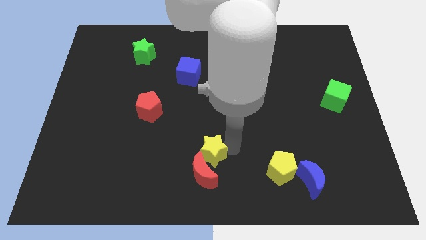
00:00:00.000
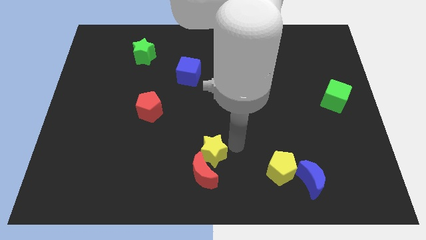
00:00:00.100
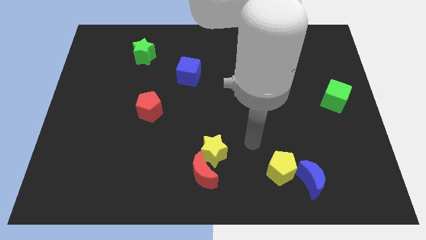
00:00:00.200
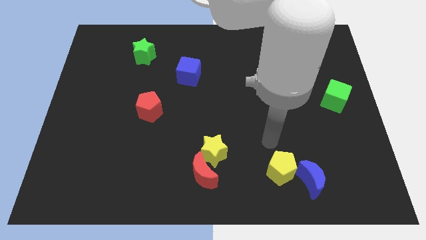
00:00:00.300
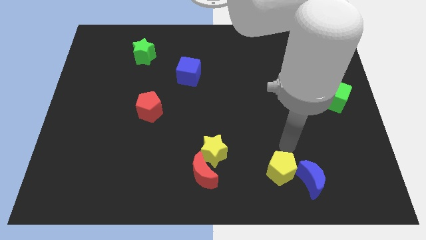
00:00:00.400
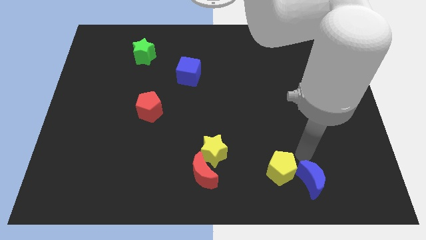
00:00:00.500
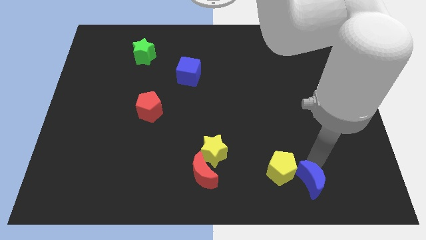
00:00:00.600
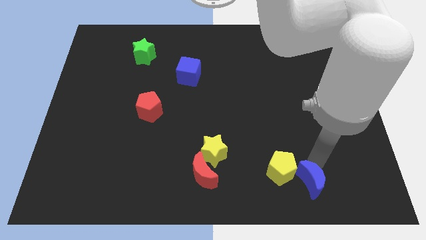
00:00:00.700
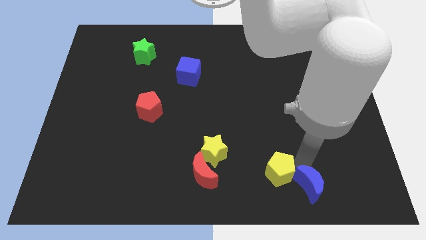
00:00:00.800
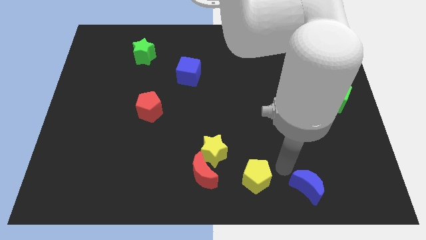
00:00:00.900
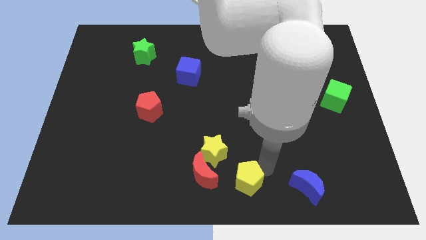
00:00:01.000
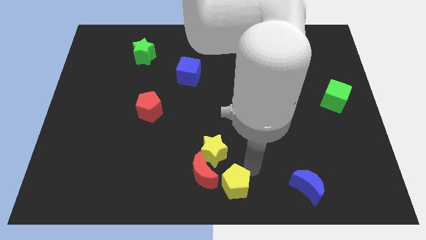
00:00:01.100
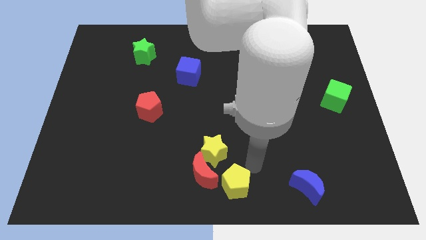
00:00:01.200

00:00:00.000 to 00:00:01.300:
separate the yellow pentagon from blue crescent

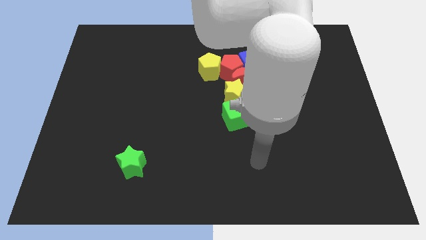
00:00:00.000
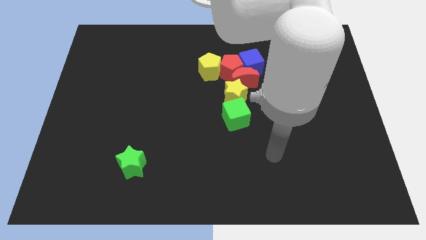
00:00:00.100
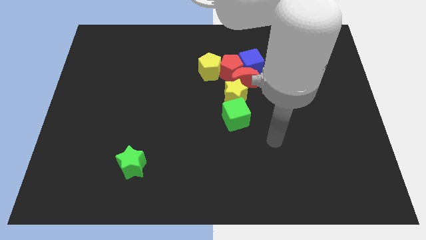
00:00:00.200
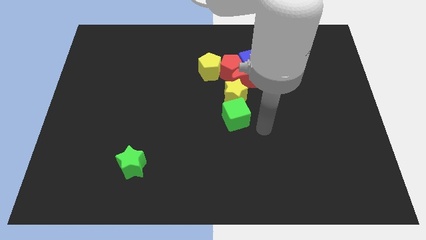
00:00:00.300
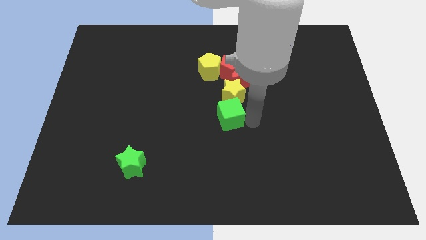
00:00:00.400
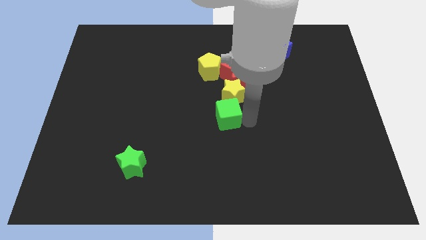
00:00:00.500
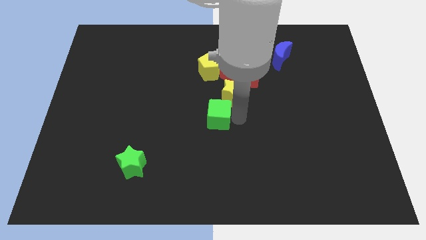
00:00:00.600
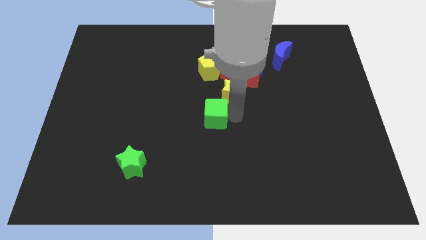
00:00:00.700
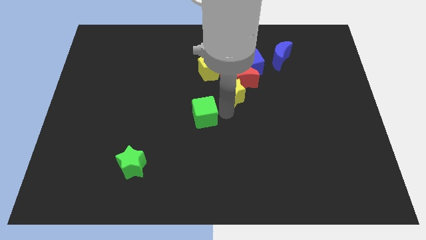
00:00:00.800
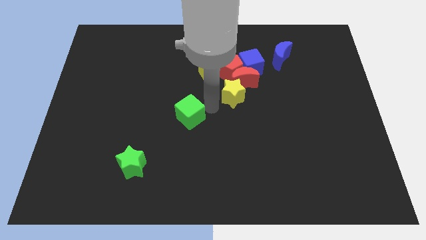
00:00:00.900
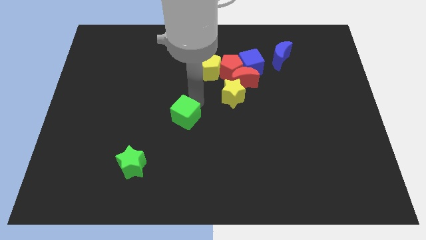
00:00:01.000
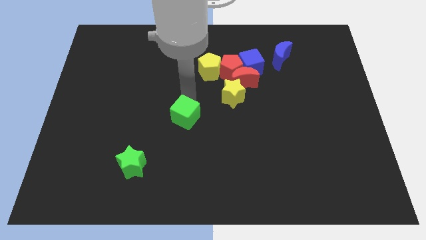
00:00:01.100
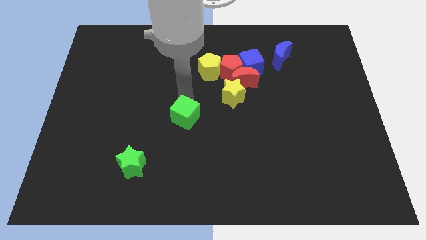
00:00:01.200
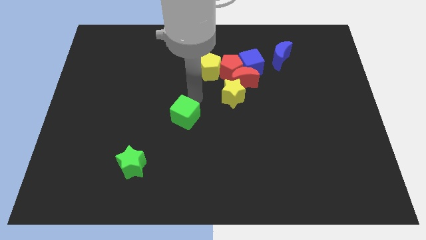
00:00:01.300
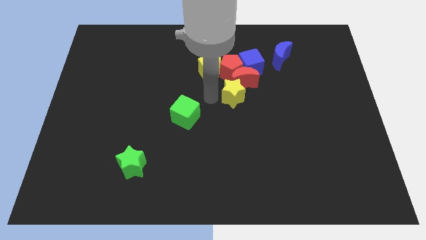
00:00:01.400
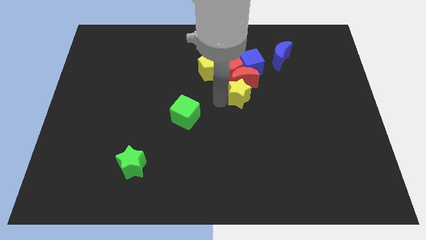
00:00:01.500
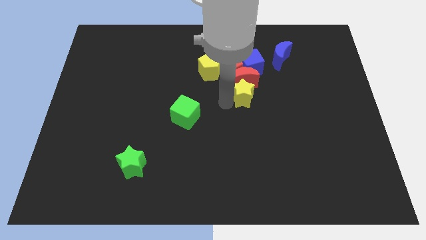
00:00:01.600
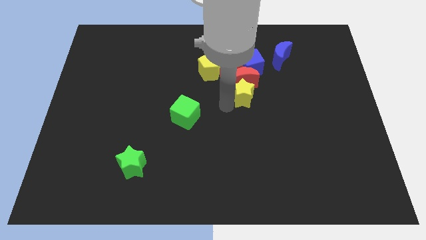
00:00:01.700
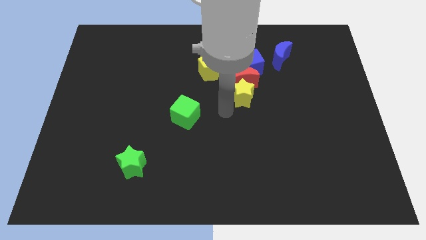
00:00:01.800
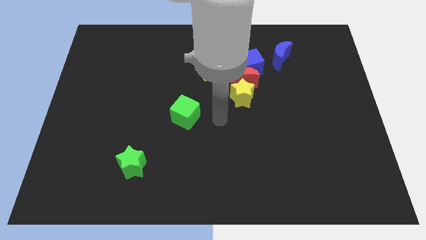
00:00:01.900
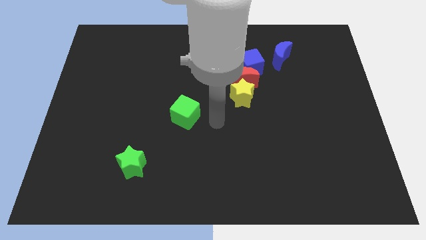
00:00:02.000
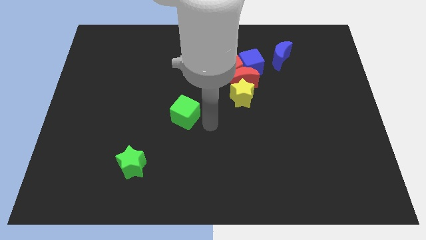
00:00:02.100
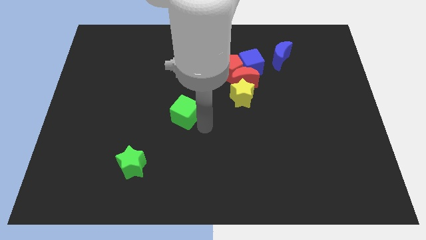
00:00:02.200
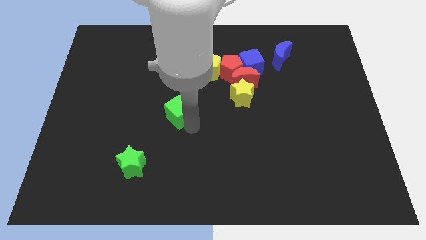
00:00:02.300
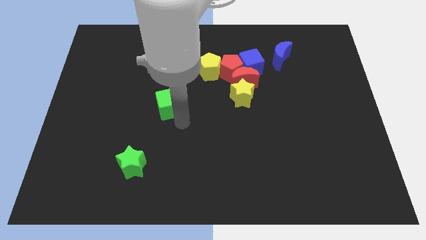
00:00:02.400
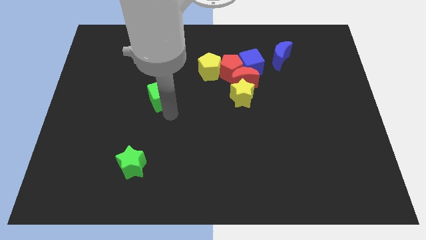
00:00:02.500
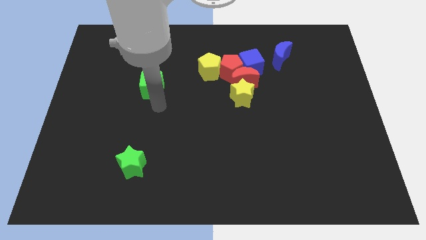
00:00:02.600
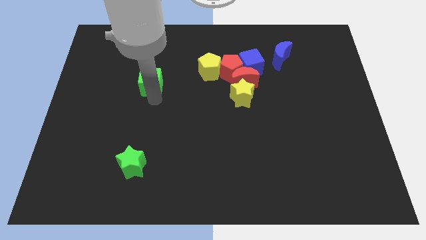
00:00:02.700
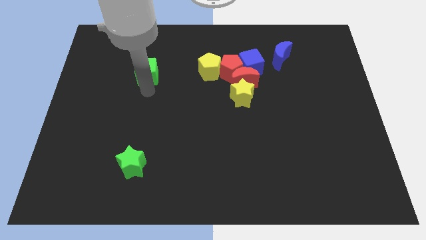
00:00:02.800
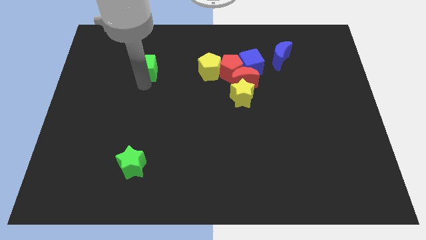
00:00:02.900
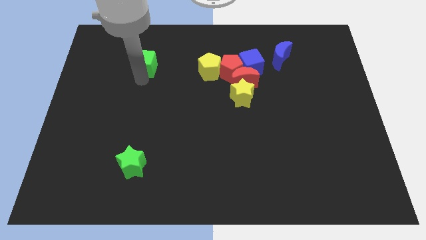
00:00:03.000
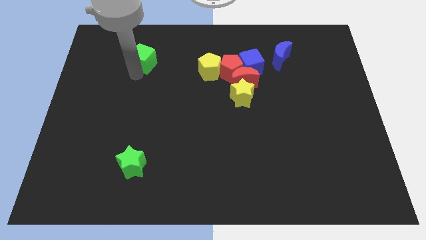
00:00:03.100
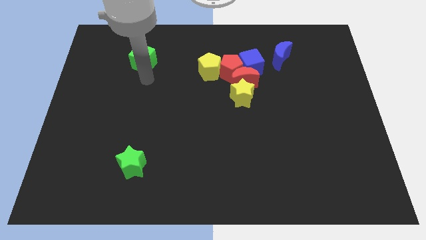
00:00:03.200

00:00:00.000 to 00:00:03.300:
place green cube above vertical to the green star

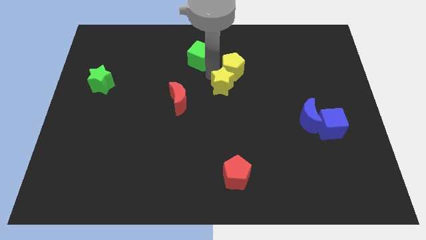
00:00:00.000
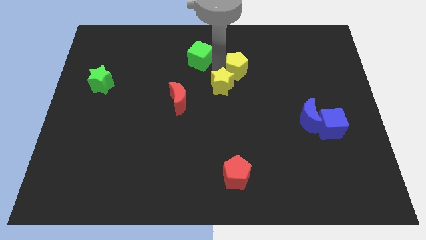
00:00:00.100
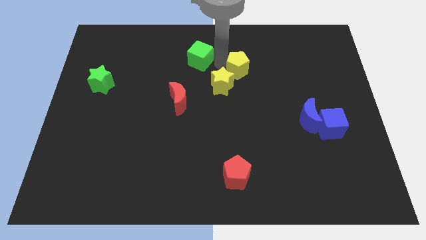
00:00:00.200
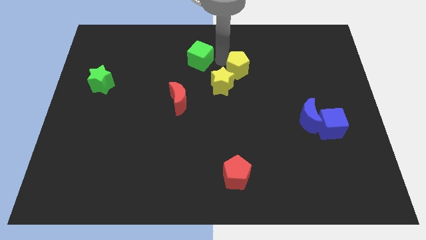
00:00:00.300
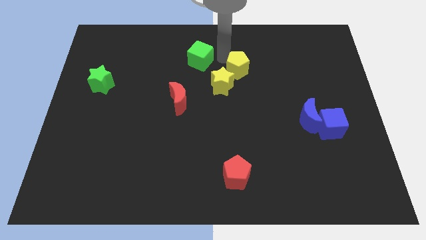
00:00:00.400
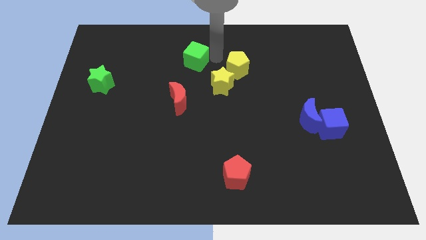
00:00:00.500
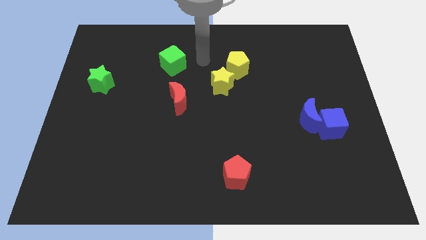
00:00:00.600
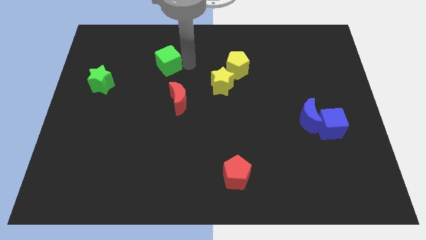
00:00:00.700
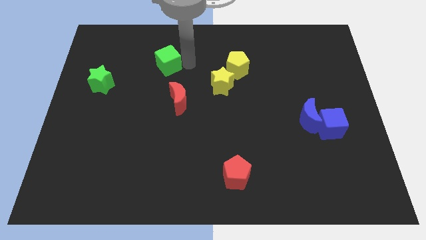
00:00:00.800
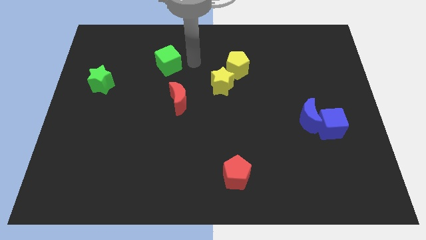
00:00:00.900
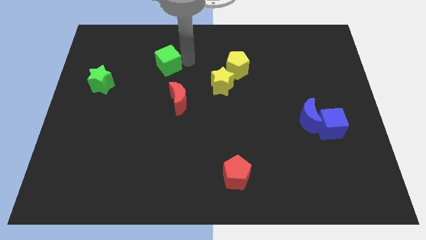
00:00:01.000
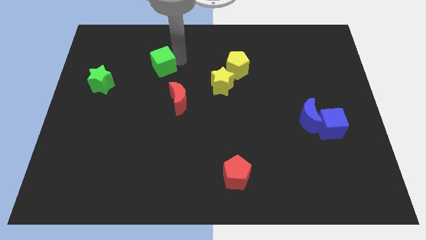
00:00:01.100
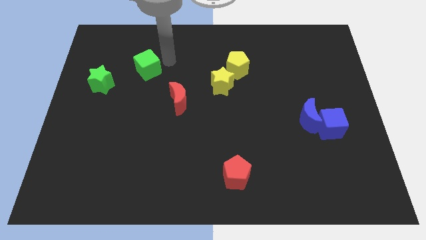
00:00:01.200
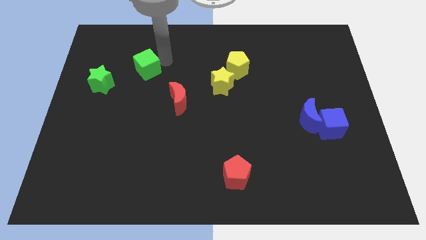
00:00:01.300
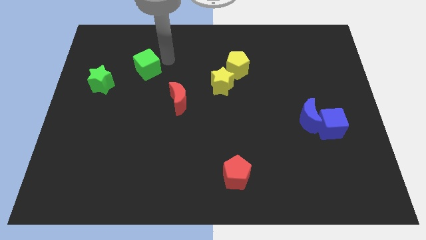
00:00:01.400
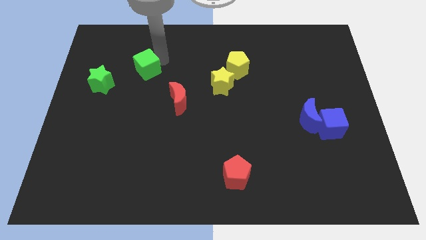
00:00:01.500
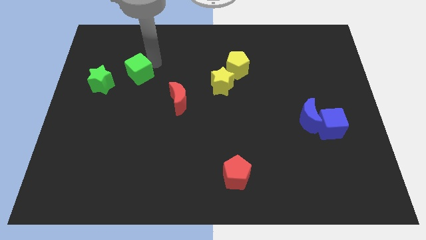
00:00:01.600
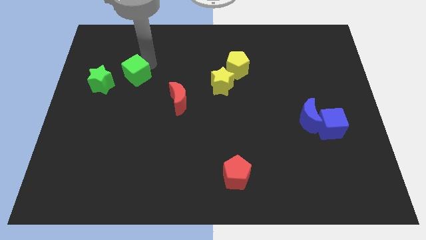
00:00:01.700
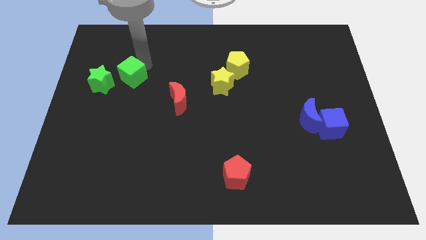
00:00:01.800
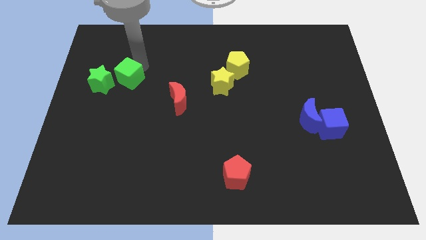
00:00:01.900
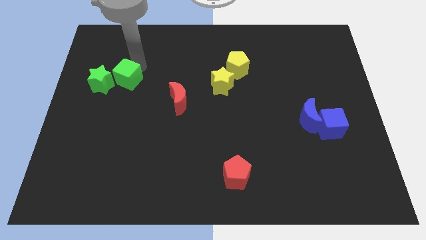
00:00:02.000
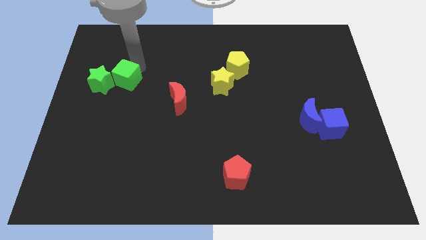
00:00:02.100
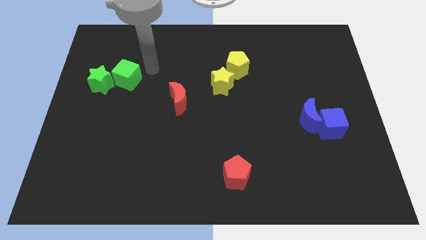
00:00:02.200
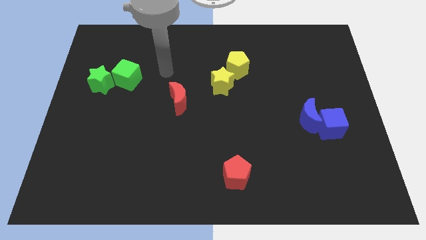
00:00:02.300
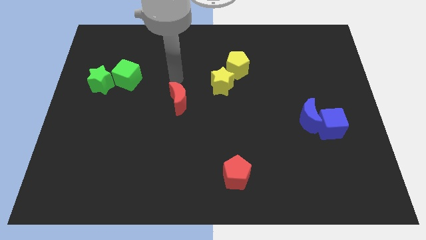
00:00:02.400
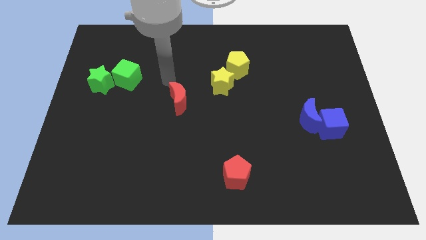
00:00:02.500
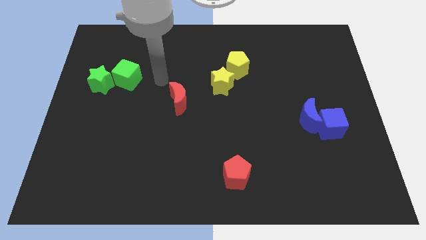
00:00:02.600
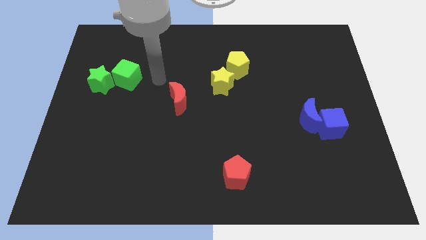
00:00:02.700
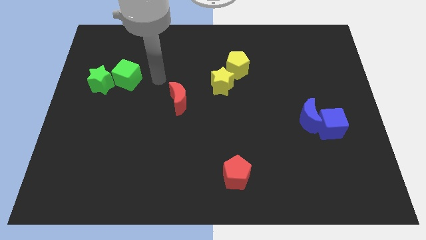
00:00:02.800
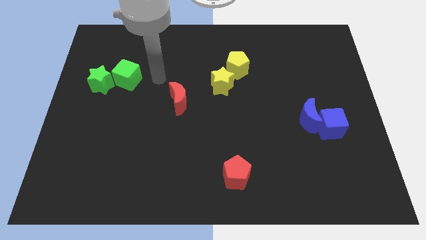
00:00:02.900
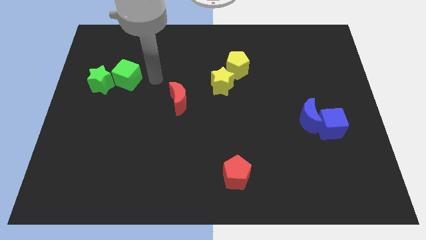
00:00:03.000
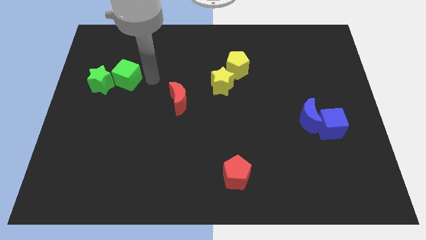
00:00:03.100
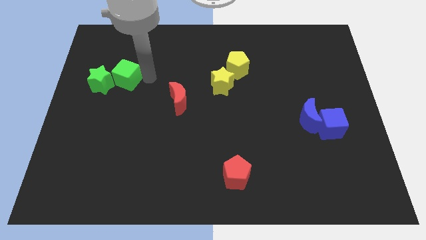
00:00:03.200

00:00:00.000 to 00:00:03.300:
push the green cube into the green star

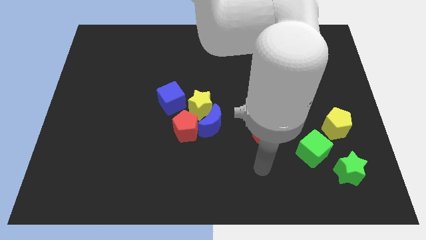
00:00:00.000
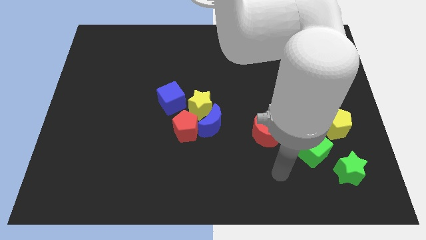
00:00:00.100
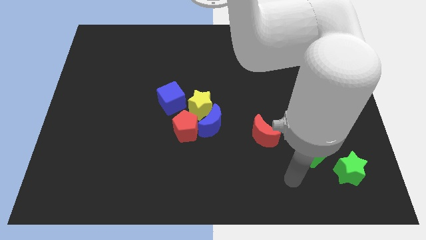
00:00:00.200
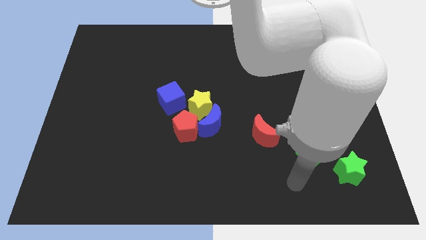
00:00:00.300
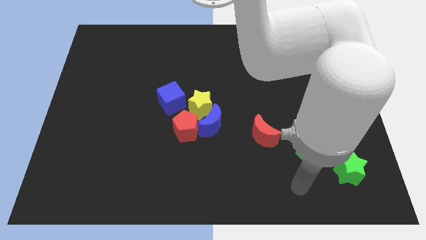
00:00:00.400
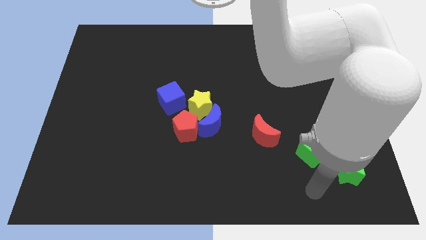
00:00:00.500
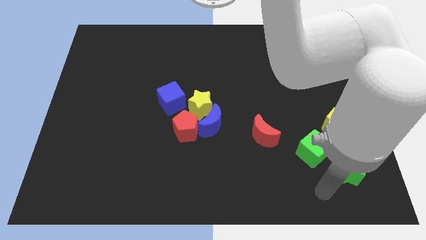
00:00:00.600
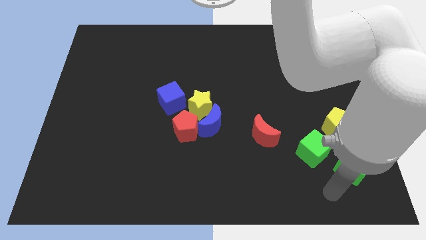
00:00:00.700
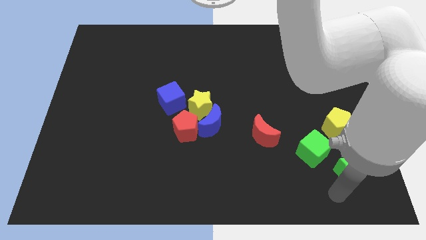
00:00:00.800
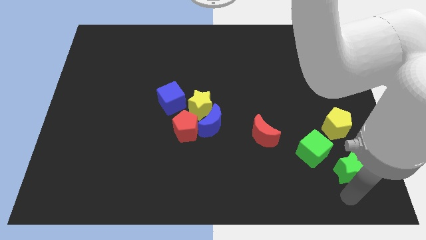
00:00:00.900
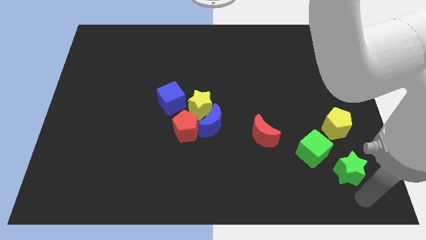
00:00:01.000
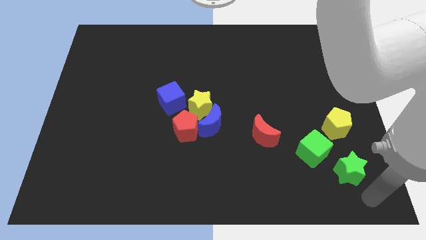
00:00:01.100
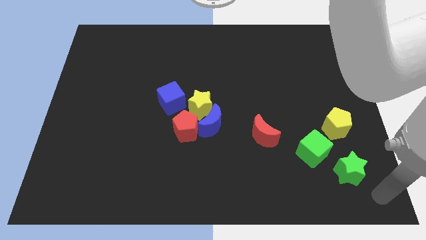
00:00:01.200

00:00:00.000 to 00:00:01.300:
place arm at bottom right corner of the board
